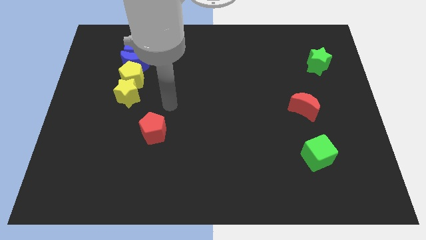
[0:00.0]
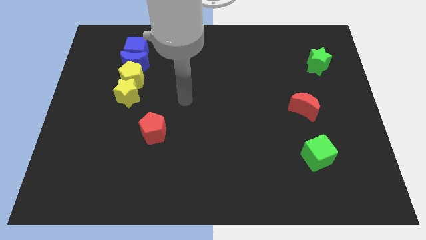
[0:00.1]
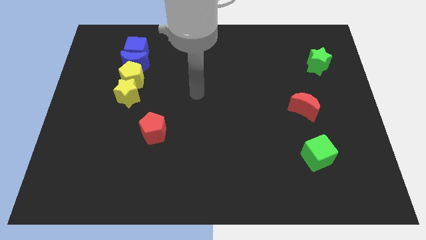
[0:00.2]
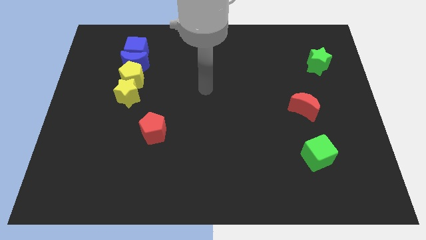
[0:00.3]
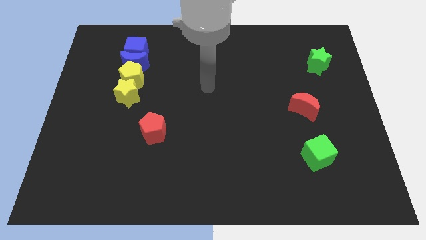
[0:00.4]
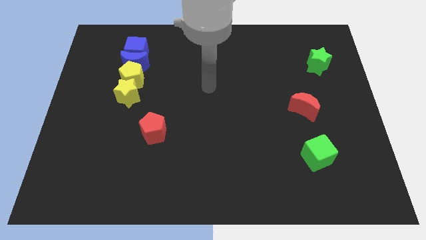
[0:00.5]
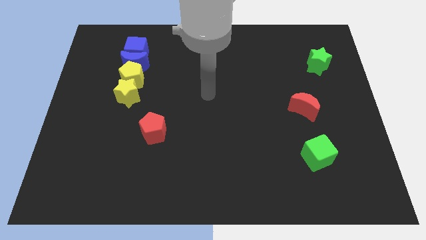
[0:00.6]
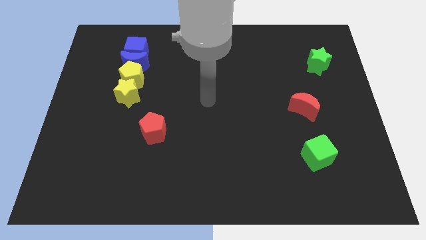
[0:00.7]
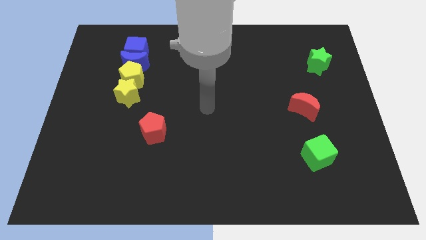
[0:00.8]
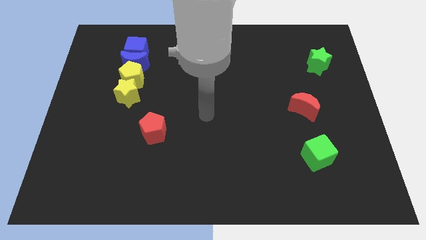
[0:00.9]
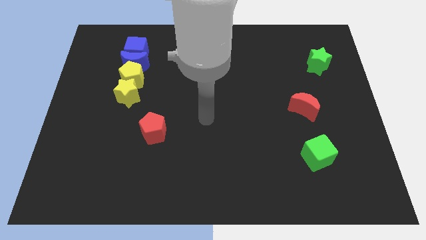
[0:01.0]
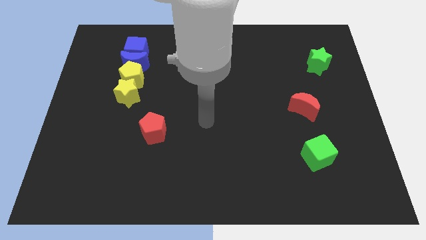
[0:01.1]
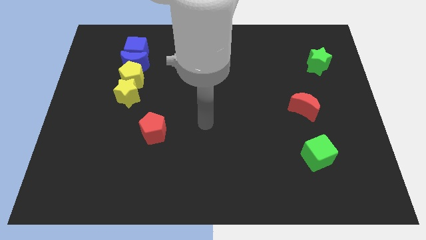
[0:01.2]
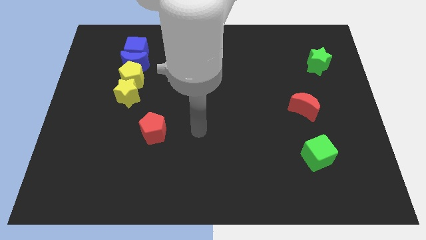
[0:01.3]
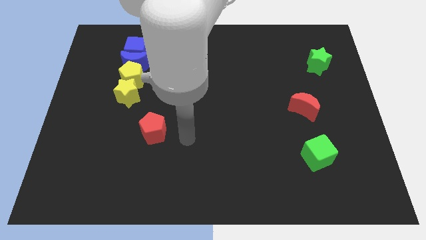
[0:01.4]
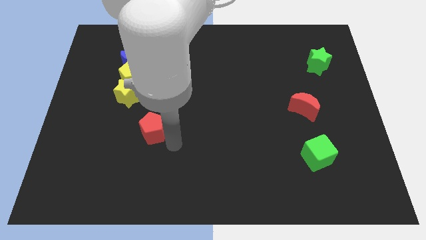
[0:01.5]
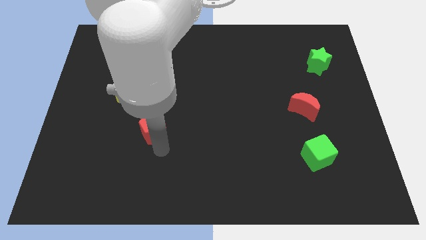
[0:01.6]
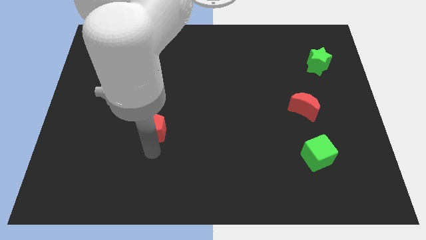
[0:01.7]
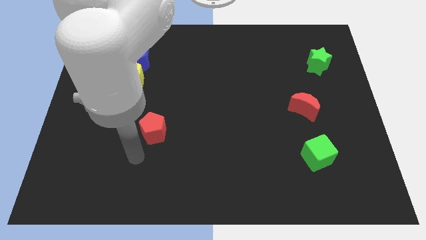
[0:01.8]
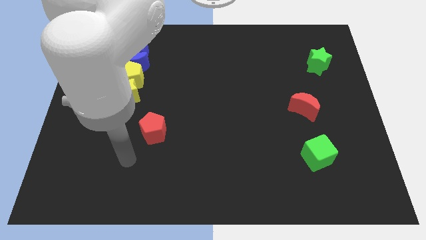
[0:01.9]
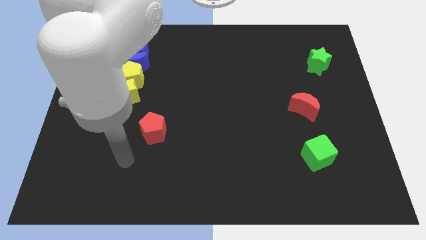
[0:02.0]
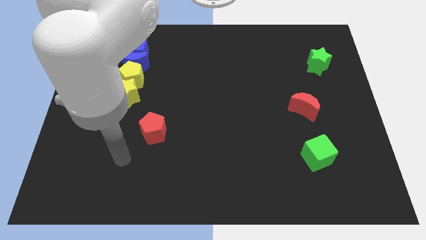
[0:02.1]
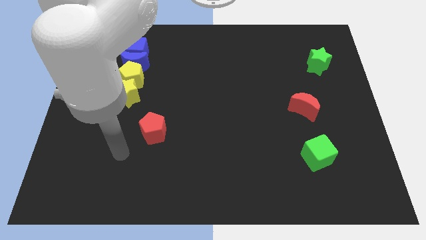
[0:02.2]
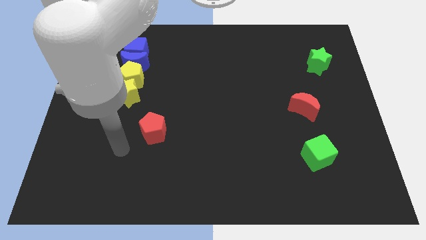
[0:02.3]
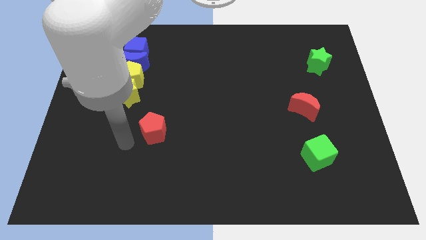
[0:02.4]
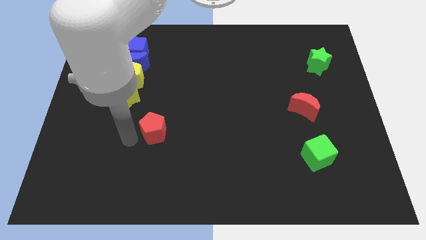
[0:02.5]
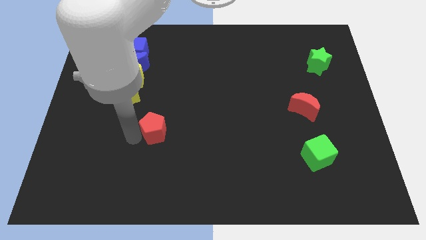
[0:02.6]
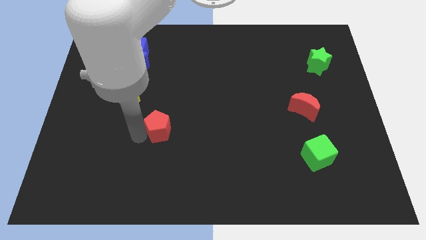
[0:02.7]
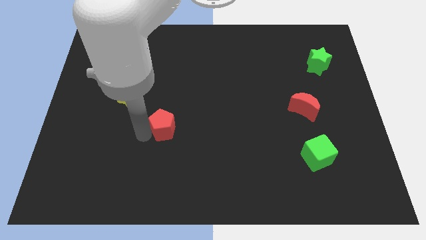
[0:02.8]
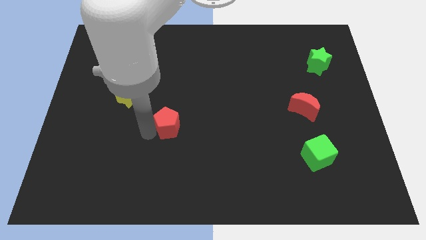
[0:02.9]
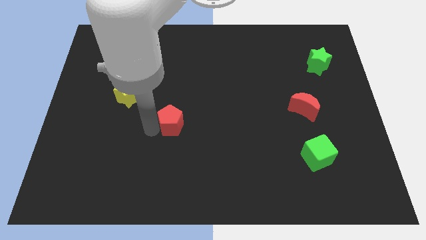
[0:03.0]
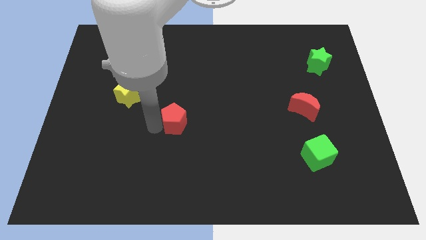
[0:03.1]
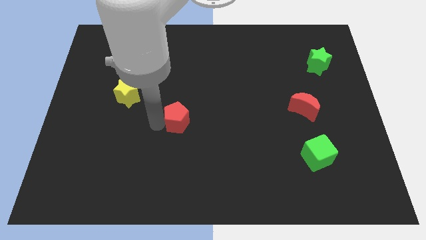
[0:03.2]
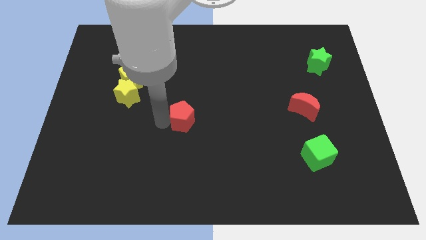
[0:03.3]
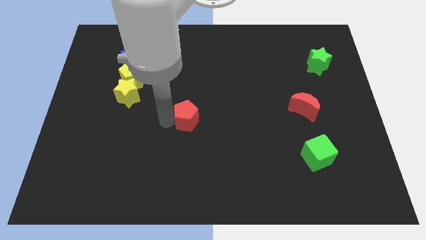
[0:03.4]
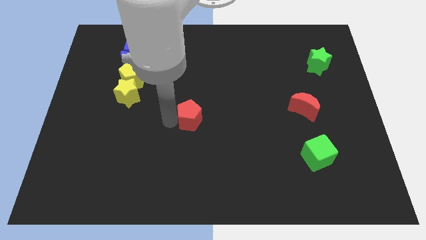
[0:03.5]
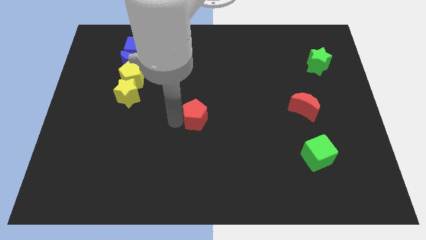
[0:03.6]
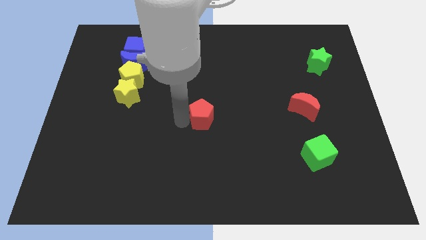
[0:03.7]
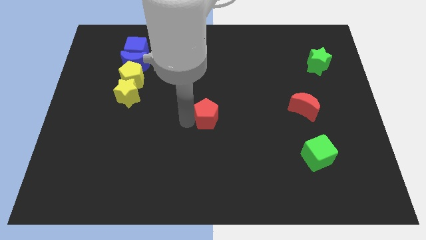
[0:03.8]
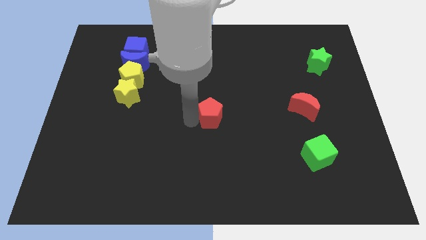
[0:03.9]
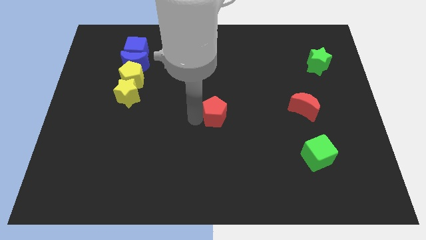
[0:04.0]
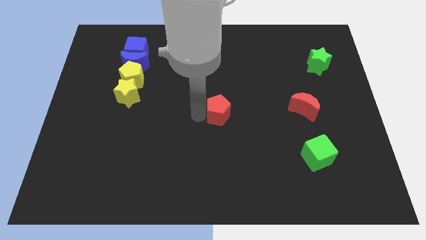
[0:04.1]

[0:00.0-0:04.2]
move the red pentagon to the center of the board

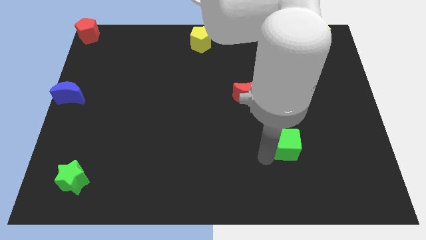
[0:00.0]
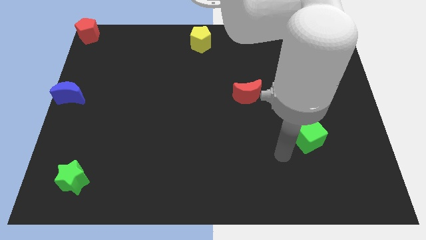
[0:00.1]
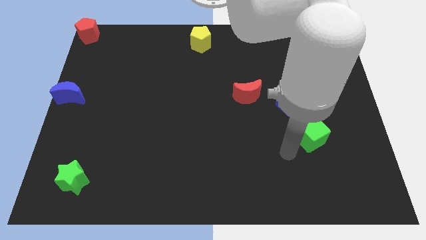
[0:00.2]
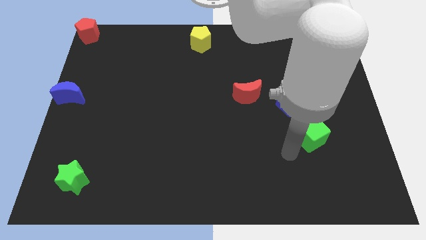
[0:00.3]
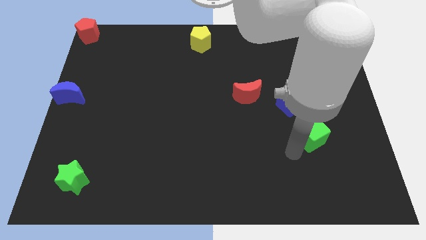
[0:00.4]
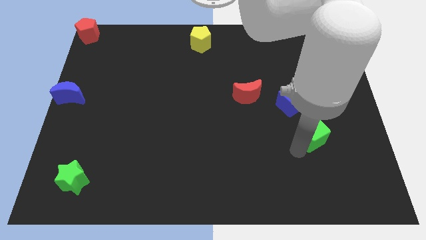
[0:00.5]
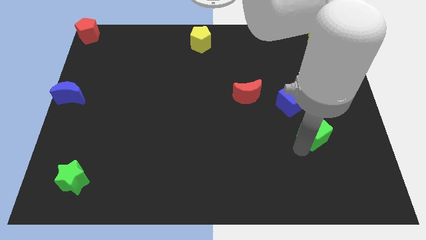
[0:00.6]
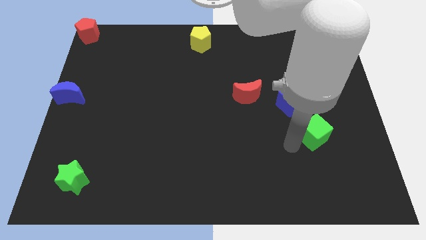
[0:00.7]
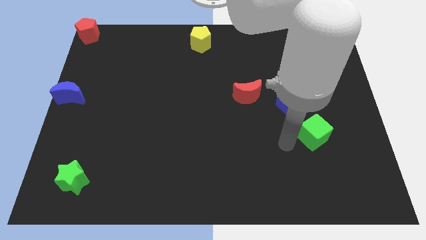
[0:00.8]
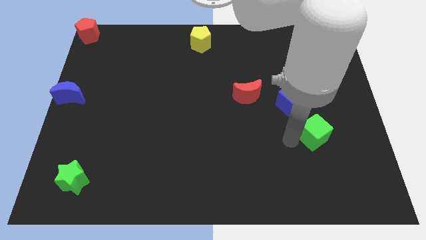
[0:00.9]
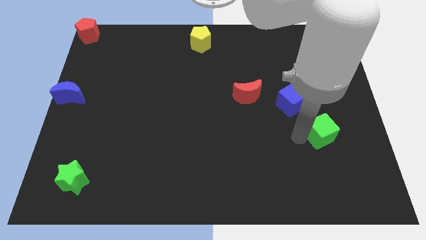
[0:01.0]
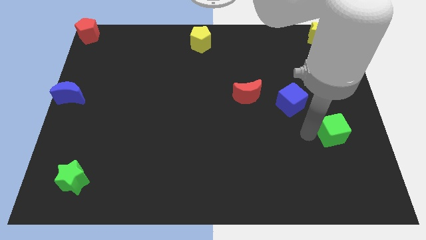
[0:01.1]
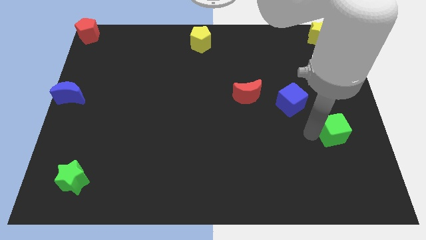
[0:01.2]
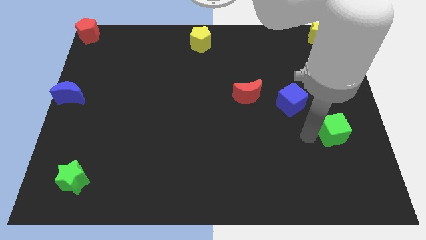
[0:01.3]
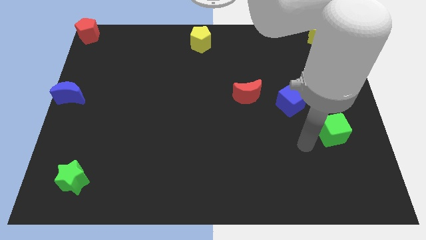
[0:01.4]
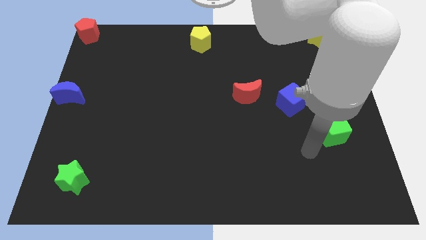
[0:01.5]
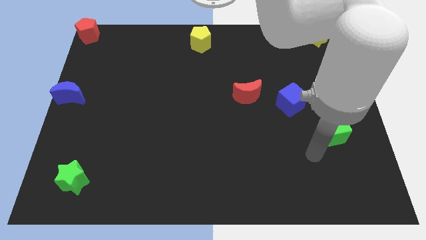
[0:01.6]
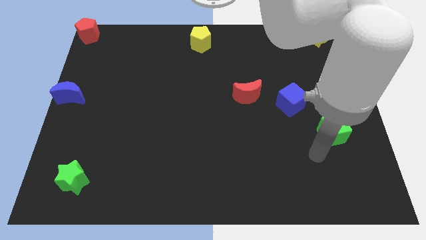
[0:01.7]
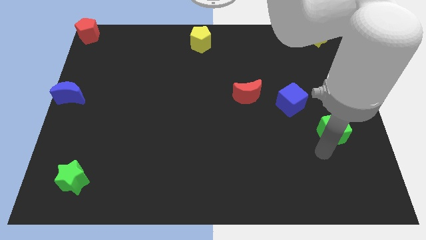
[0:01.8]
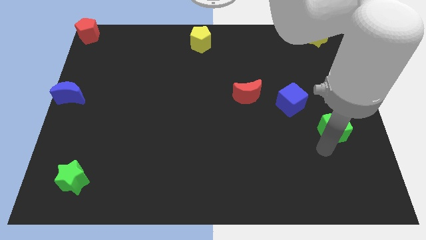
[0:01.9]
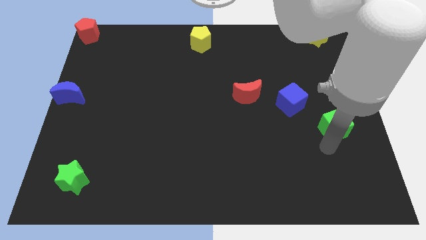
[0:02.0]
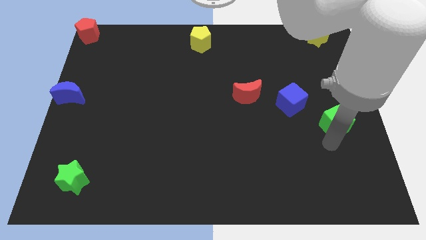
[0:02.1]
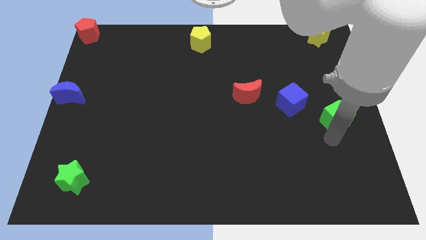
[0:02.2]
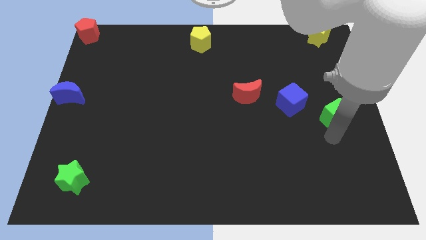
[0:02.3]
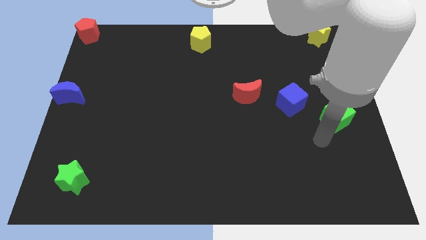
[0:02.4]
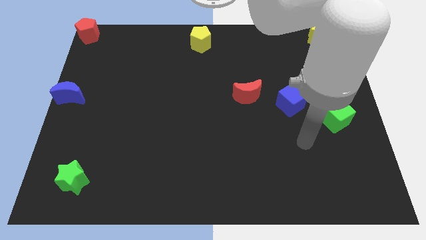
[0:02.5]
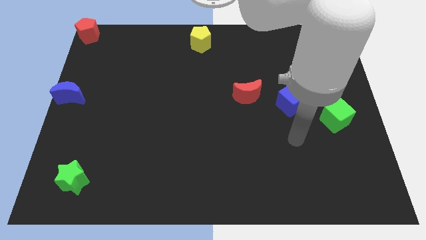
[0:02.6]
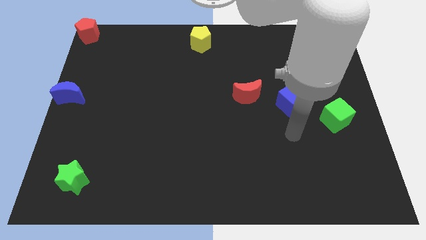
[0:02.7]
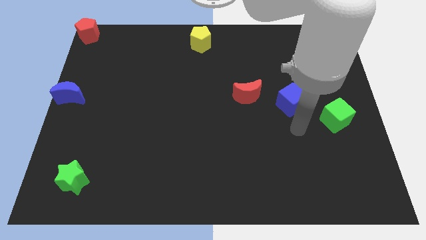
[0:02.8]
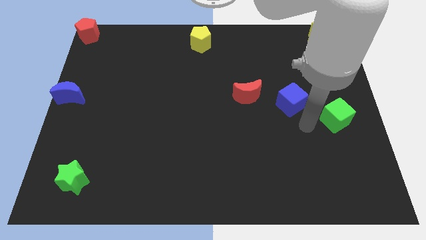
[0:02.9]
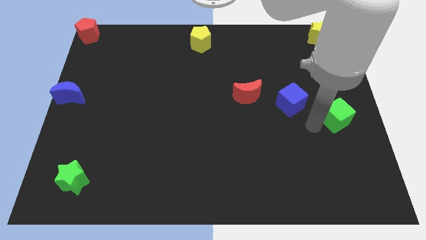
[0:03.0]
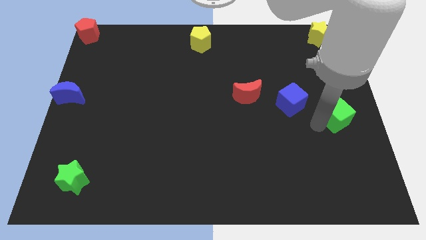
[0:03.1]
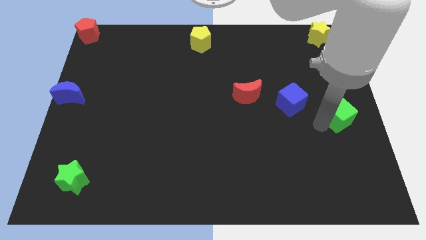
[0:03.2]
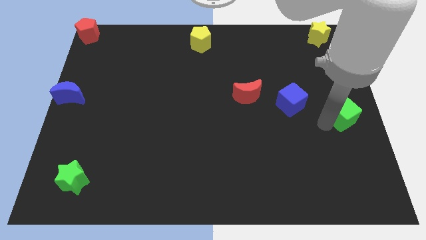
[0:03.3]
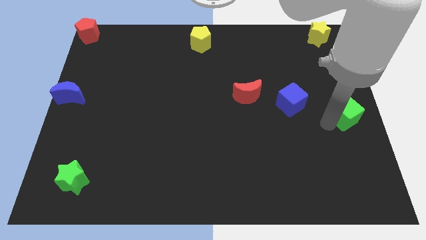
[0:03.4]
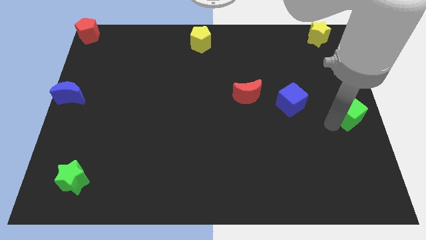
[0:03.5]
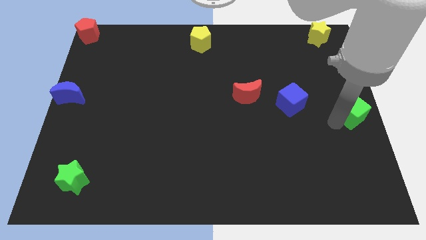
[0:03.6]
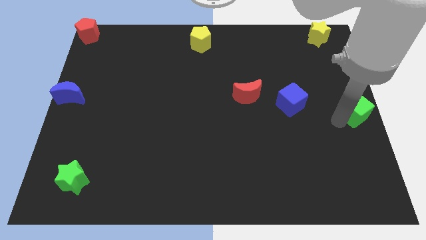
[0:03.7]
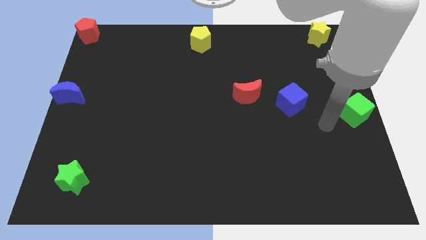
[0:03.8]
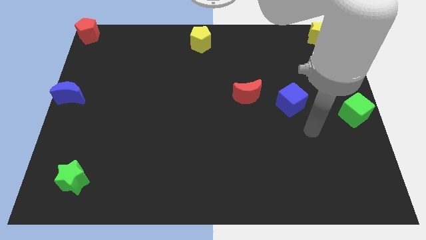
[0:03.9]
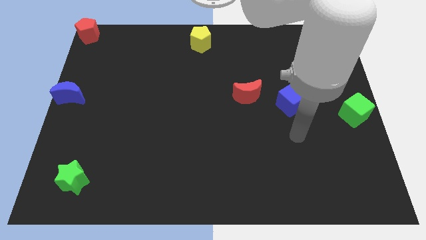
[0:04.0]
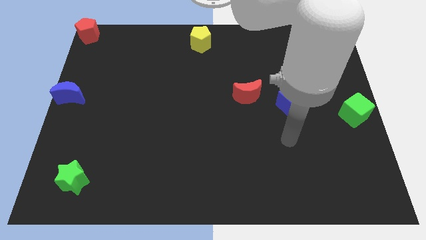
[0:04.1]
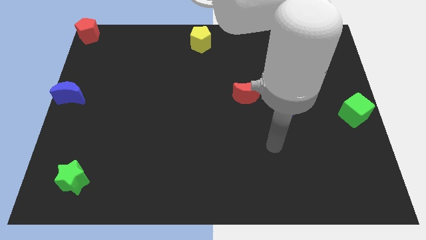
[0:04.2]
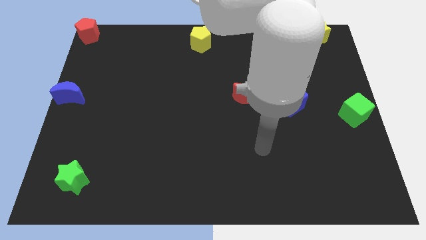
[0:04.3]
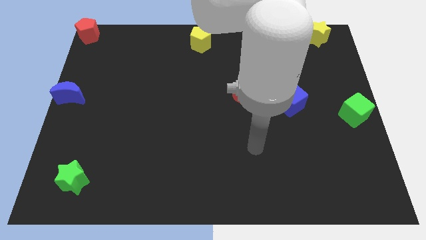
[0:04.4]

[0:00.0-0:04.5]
place the green cube at the center right corner

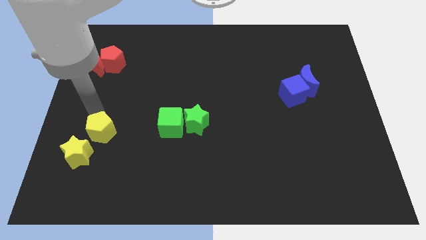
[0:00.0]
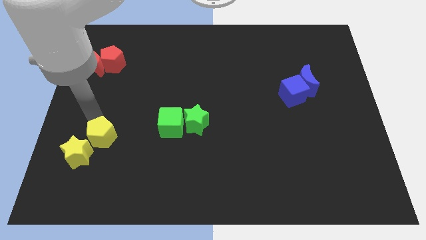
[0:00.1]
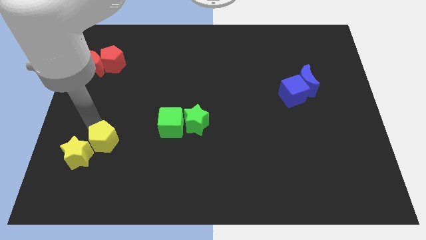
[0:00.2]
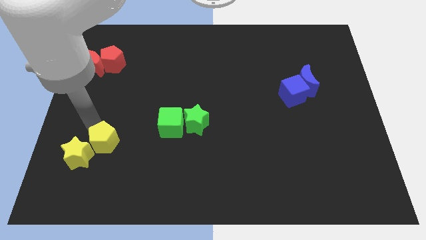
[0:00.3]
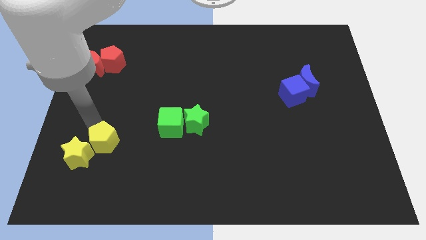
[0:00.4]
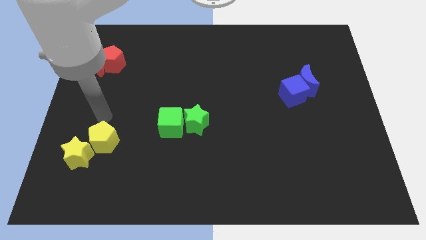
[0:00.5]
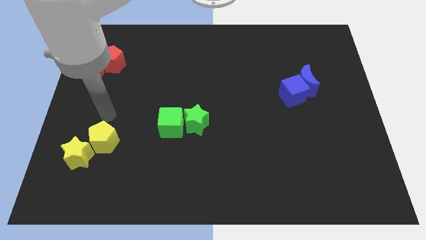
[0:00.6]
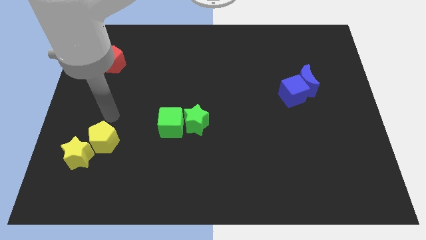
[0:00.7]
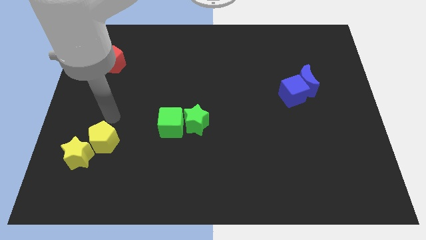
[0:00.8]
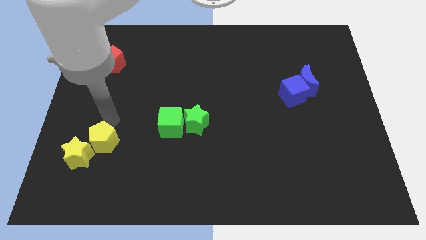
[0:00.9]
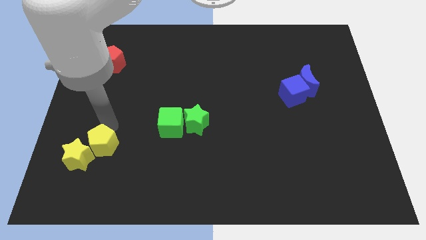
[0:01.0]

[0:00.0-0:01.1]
push yellow pentagon in to yellow star
